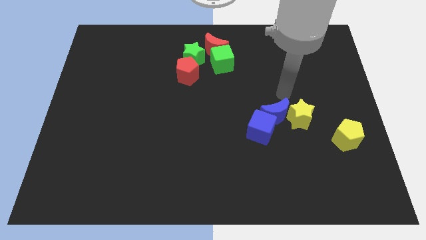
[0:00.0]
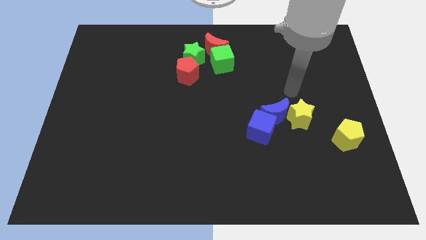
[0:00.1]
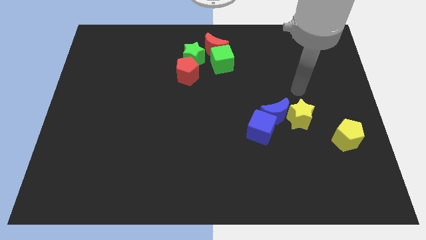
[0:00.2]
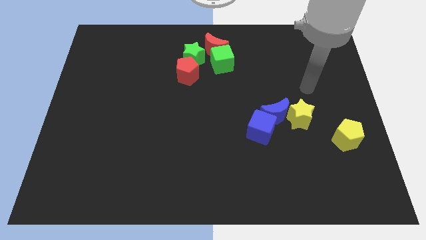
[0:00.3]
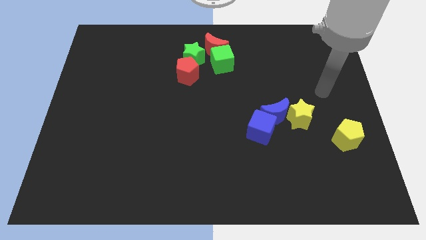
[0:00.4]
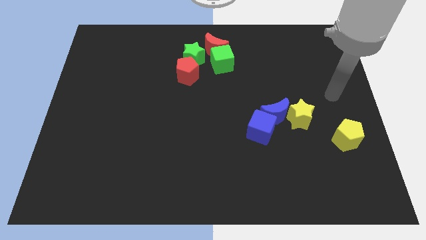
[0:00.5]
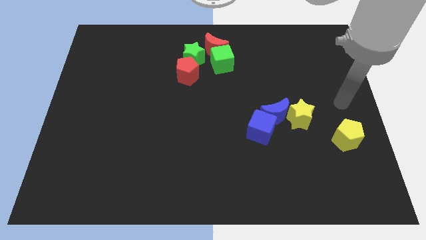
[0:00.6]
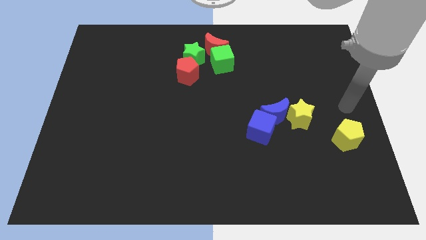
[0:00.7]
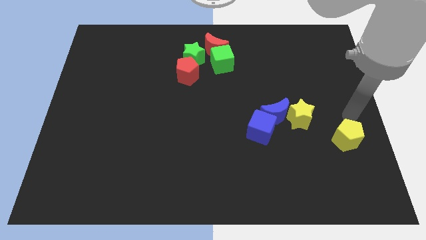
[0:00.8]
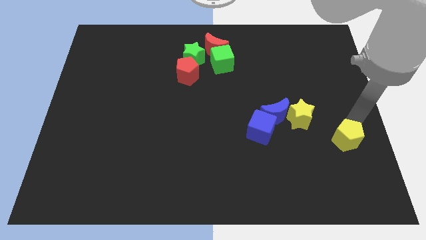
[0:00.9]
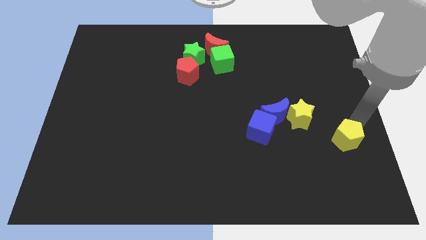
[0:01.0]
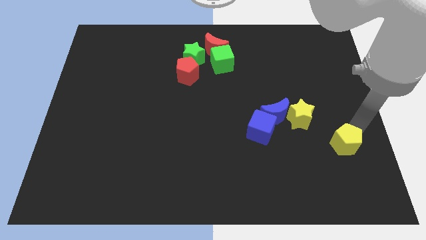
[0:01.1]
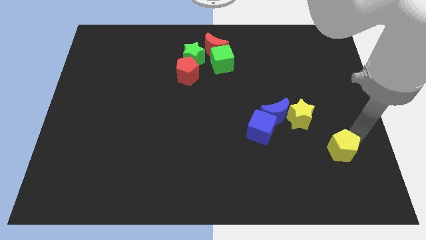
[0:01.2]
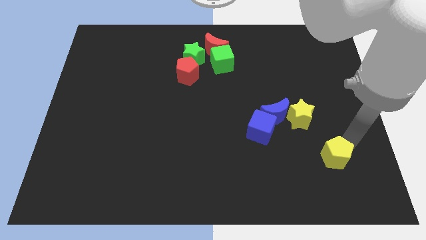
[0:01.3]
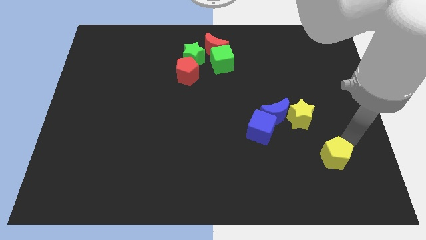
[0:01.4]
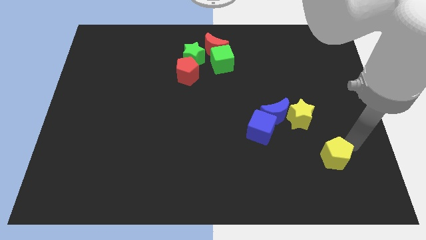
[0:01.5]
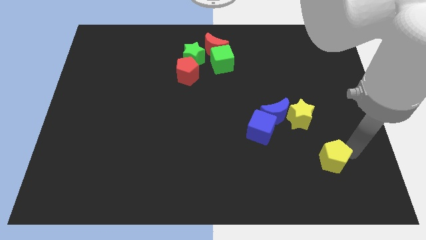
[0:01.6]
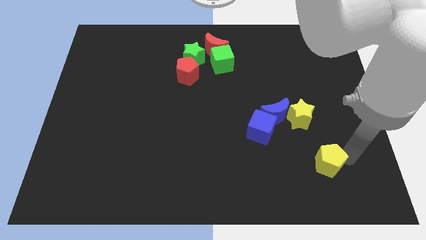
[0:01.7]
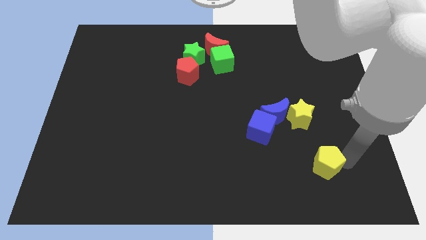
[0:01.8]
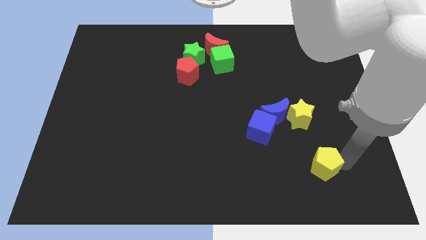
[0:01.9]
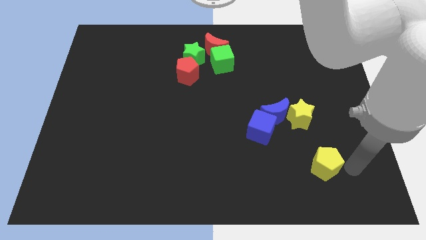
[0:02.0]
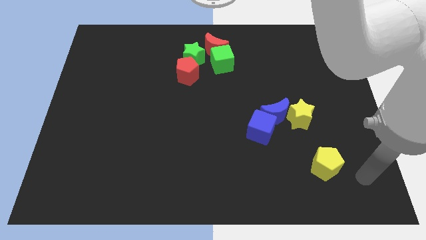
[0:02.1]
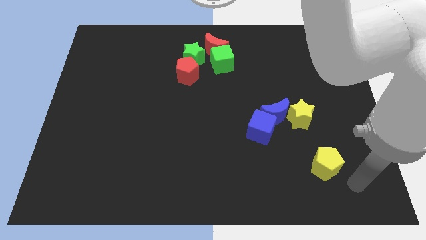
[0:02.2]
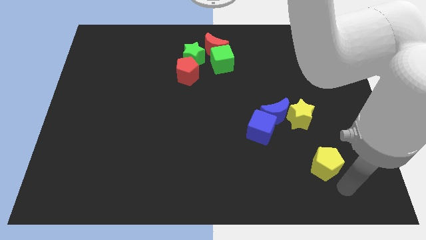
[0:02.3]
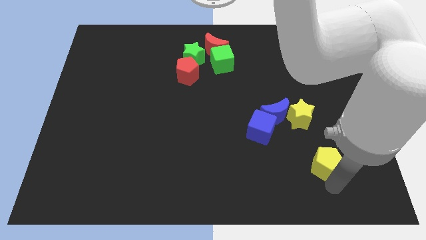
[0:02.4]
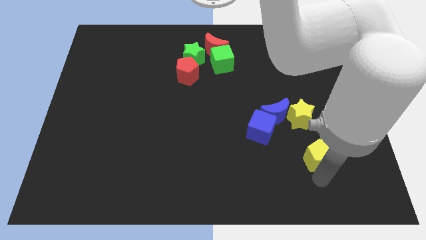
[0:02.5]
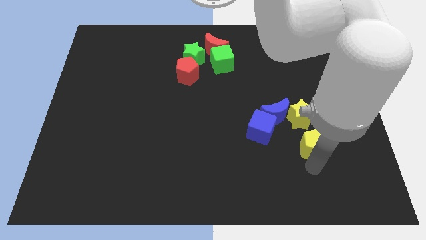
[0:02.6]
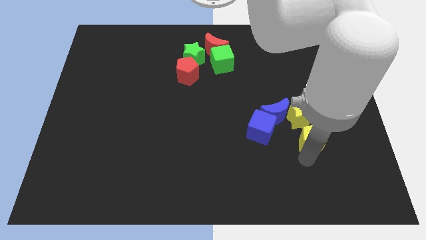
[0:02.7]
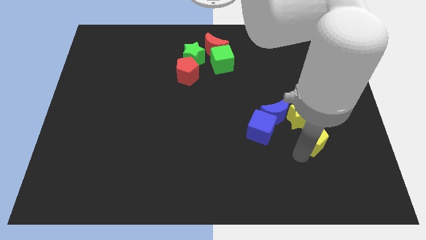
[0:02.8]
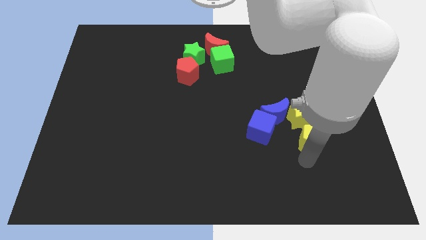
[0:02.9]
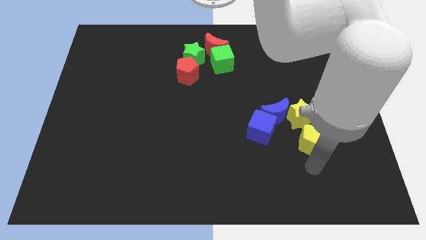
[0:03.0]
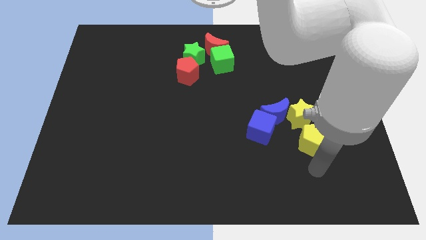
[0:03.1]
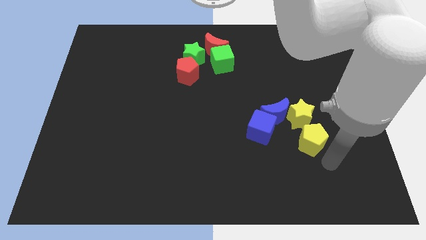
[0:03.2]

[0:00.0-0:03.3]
place yellow pentagon down to the yellow star

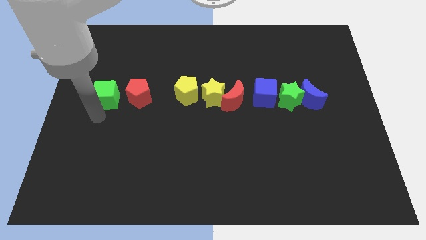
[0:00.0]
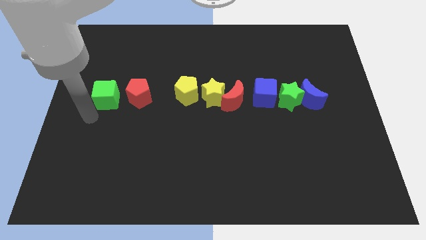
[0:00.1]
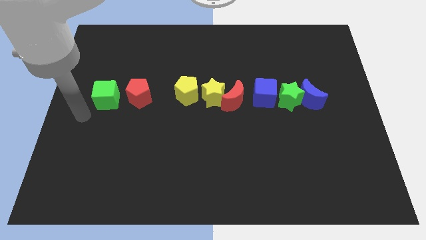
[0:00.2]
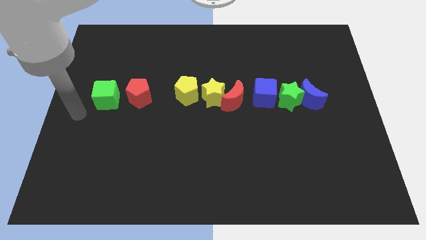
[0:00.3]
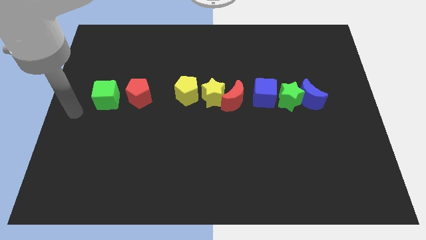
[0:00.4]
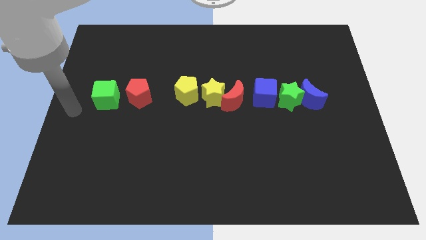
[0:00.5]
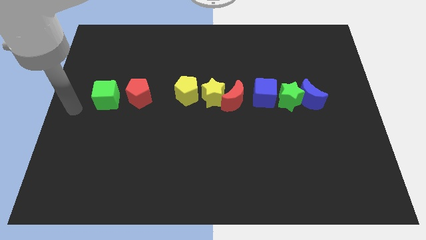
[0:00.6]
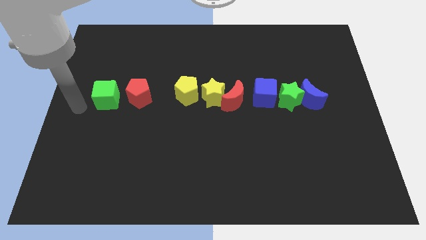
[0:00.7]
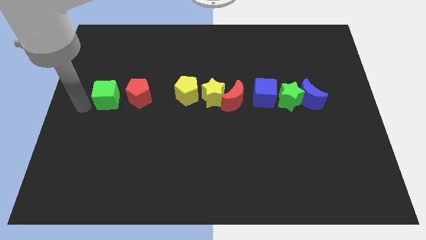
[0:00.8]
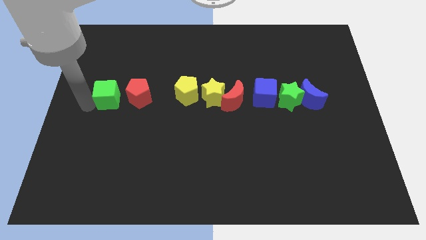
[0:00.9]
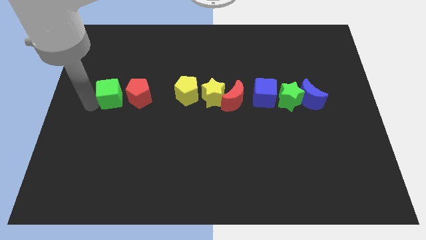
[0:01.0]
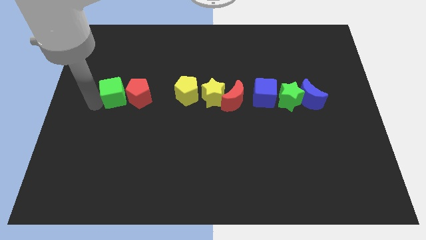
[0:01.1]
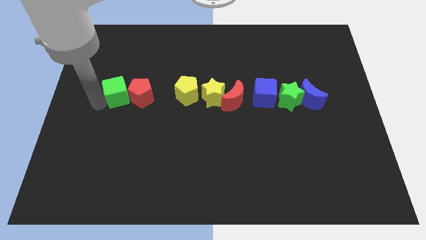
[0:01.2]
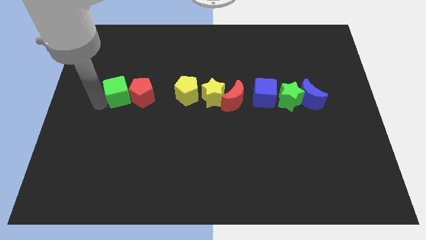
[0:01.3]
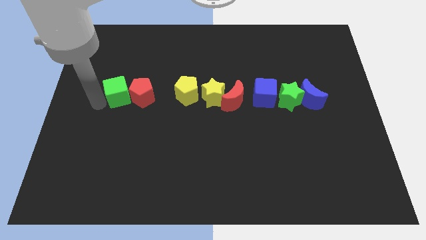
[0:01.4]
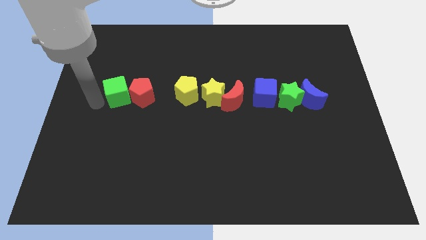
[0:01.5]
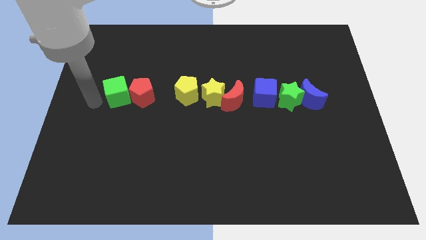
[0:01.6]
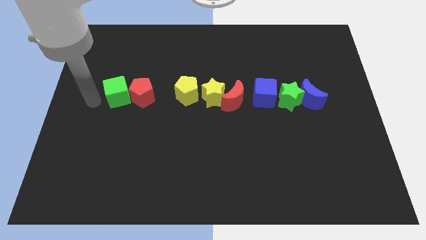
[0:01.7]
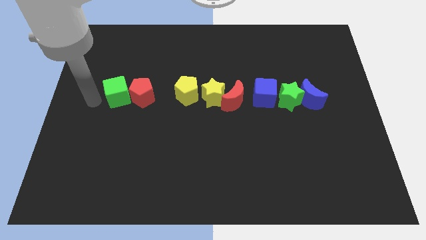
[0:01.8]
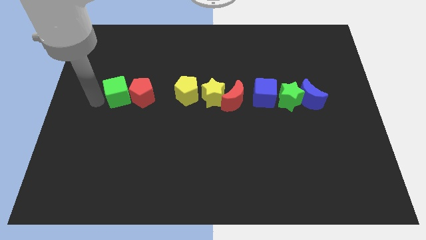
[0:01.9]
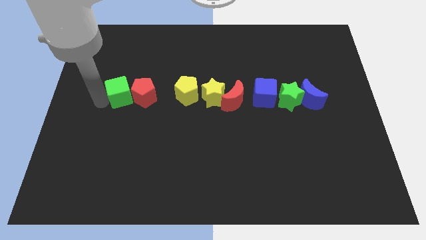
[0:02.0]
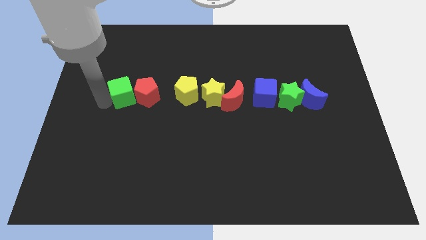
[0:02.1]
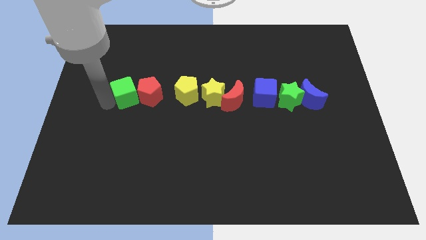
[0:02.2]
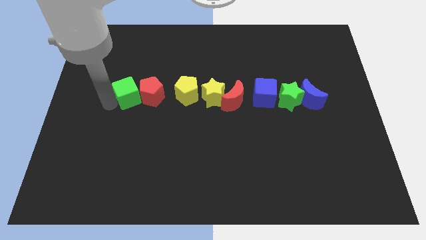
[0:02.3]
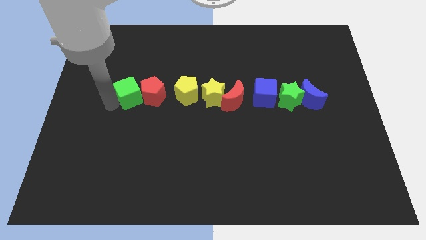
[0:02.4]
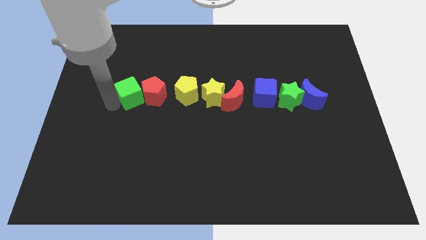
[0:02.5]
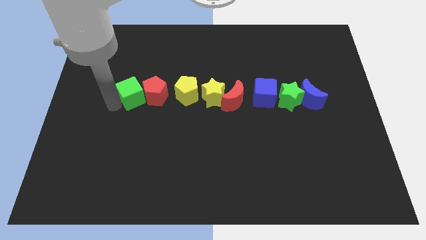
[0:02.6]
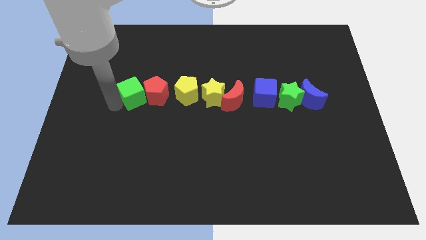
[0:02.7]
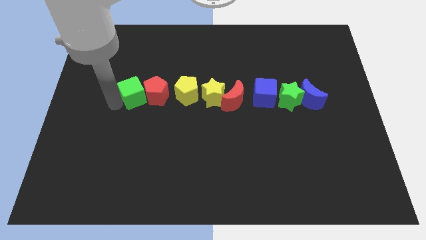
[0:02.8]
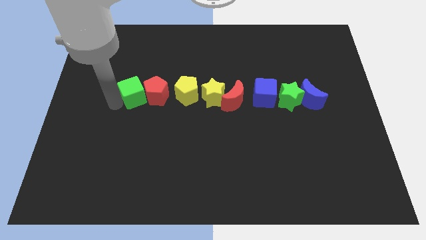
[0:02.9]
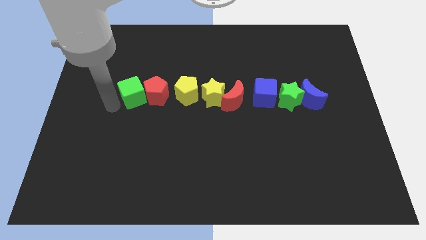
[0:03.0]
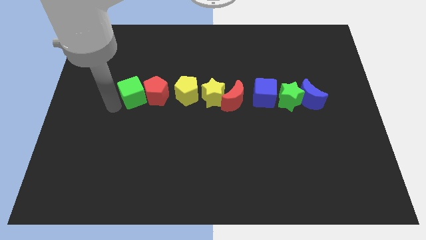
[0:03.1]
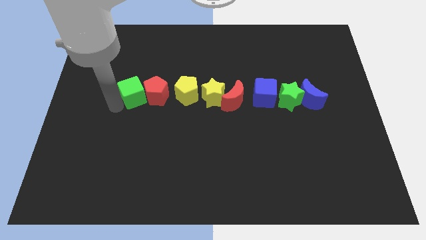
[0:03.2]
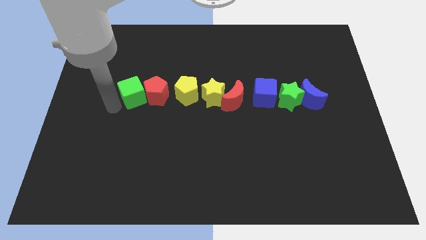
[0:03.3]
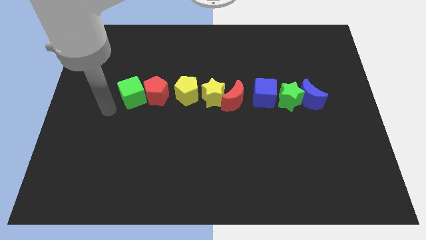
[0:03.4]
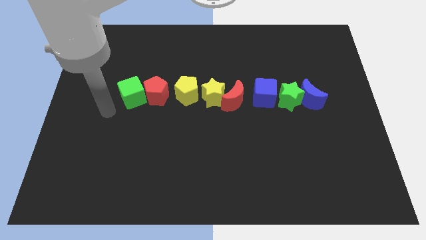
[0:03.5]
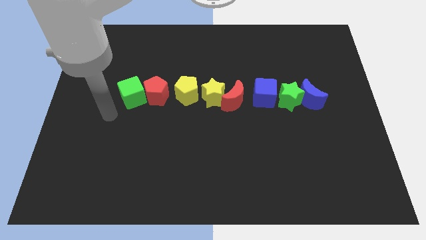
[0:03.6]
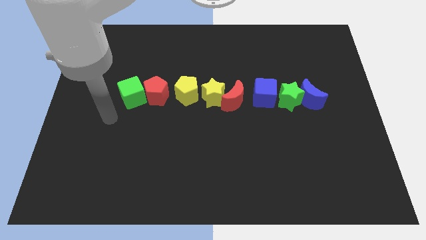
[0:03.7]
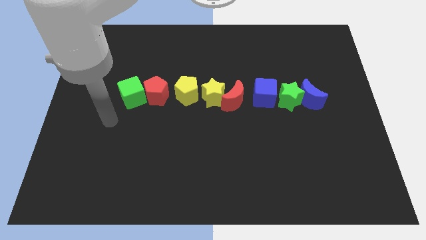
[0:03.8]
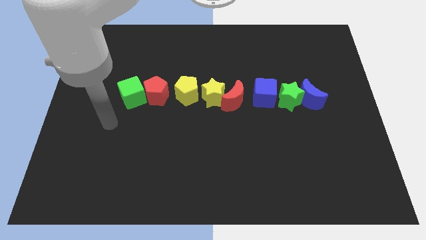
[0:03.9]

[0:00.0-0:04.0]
move the green cube into the red pentagon towards the left of the yellow pentagon

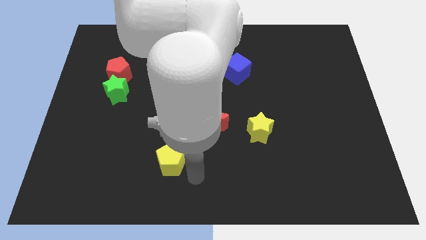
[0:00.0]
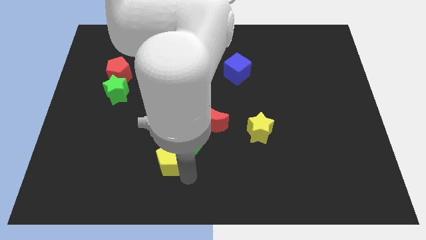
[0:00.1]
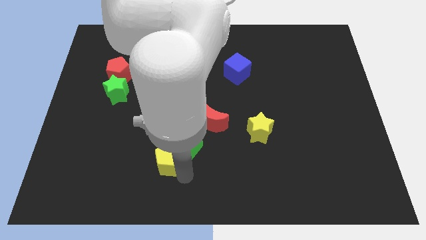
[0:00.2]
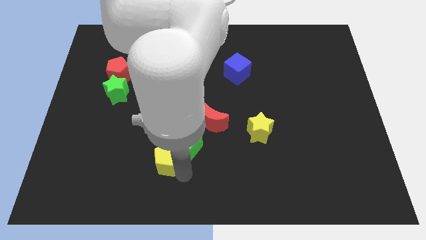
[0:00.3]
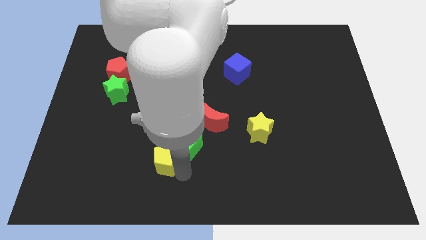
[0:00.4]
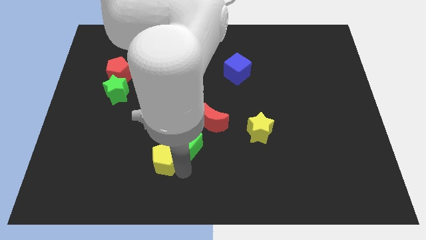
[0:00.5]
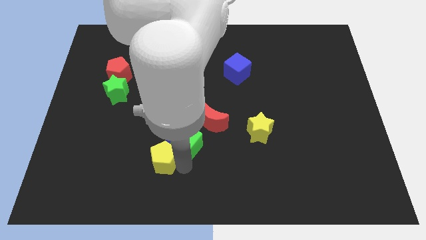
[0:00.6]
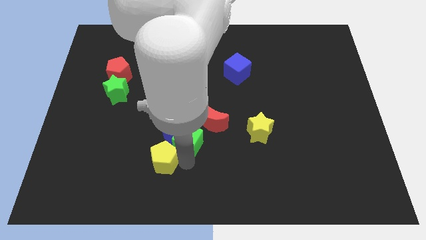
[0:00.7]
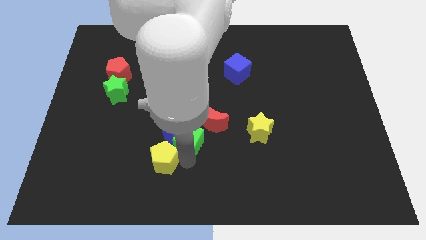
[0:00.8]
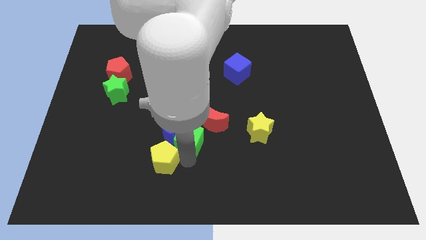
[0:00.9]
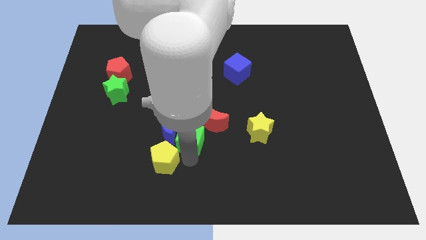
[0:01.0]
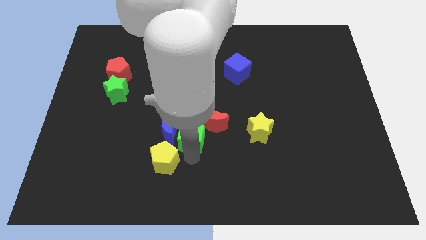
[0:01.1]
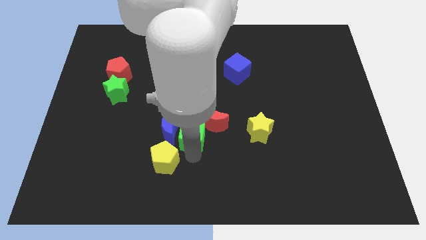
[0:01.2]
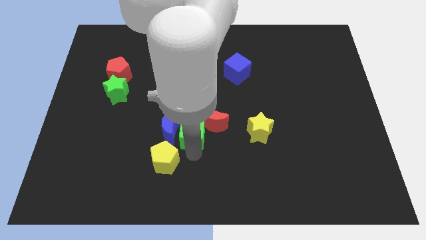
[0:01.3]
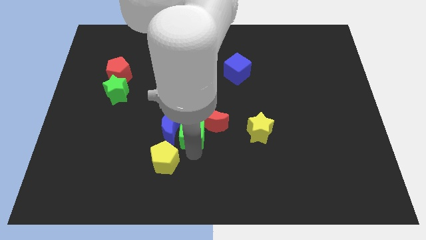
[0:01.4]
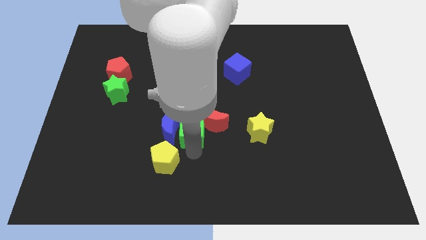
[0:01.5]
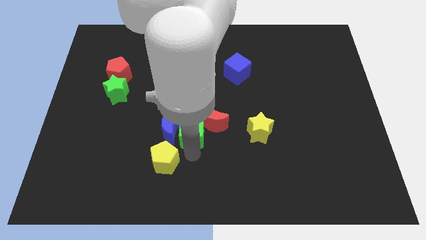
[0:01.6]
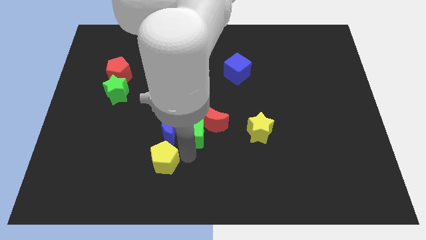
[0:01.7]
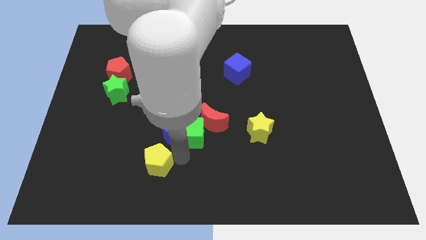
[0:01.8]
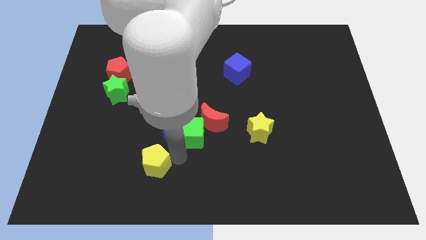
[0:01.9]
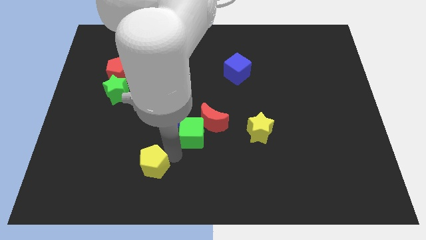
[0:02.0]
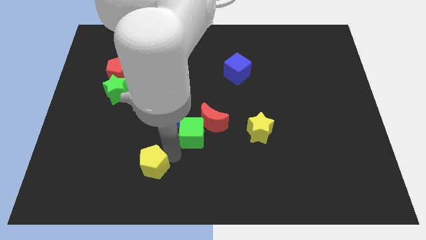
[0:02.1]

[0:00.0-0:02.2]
separate the green cube and the yellow pentagon
